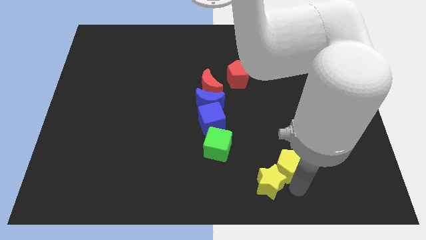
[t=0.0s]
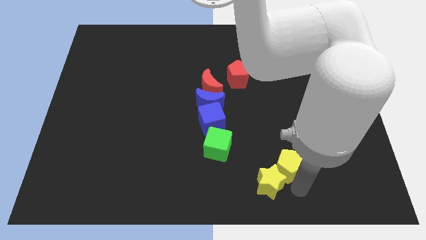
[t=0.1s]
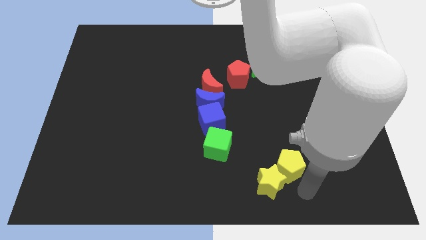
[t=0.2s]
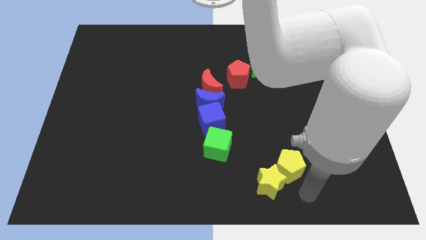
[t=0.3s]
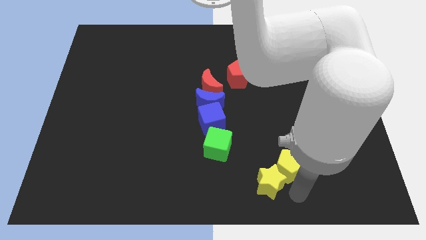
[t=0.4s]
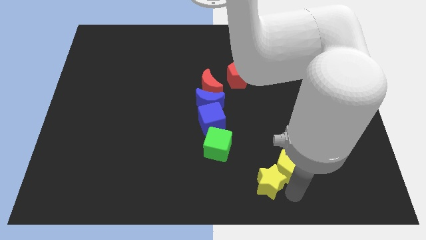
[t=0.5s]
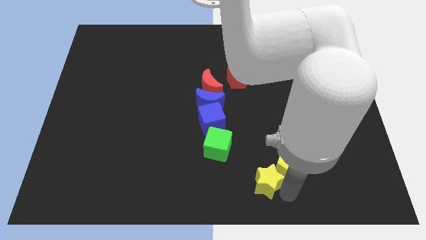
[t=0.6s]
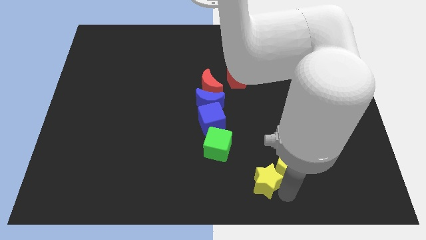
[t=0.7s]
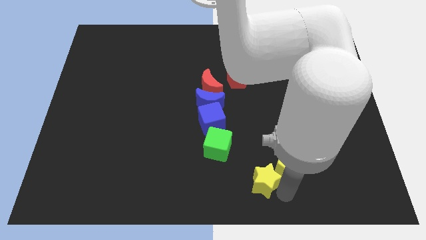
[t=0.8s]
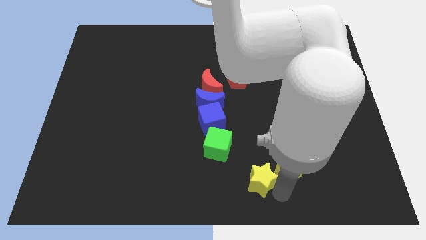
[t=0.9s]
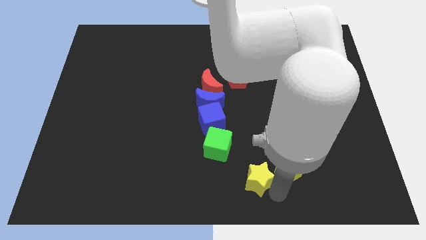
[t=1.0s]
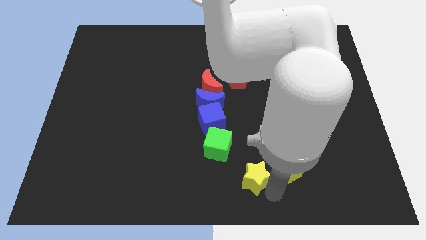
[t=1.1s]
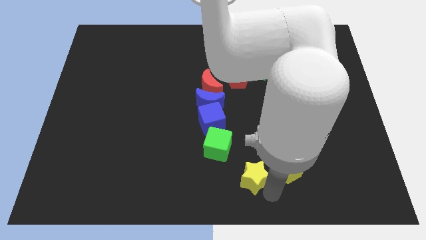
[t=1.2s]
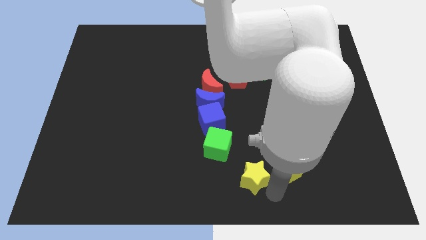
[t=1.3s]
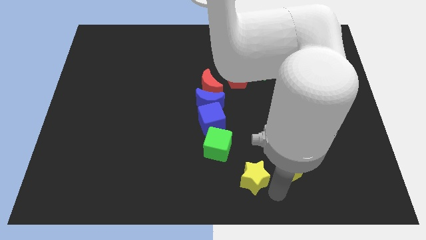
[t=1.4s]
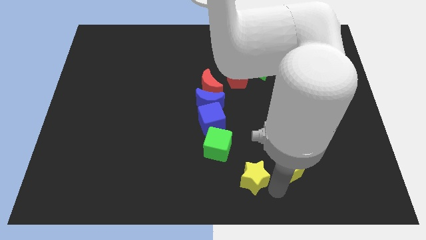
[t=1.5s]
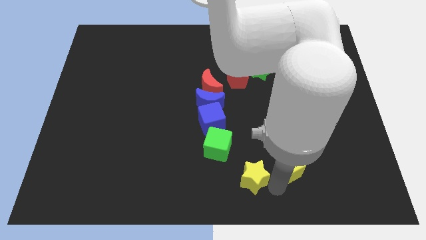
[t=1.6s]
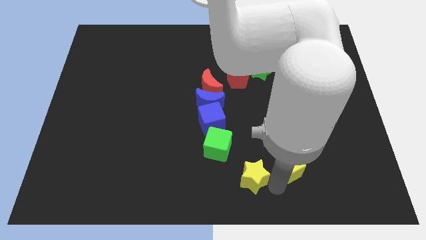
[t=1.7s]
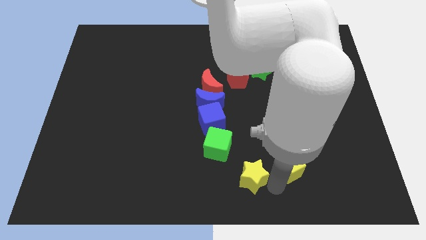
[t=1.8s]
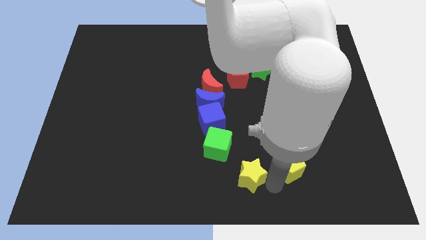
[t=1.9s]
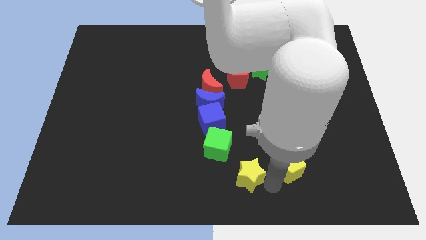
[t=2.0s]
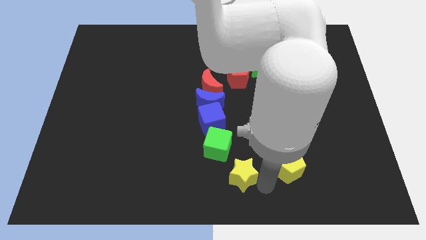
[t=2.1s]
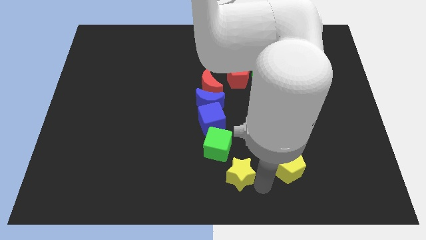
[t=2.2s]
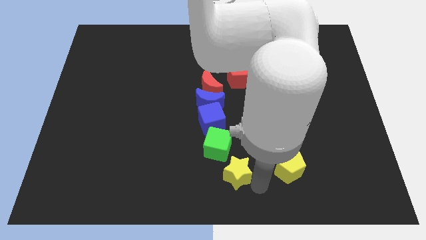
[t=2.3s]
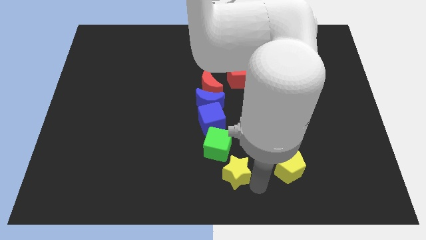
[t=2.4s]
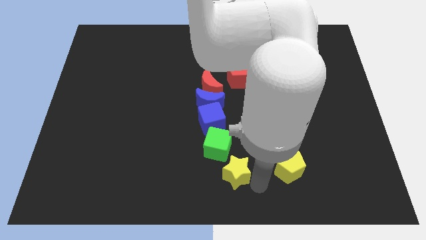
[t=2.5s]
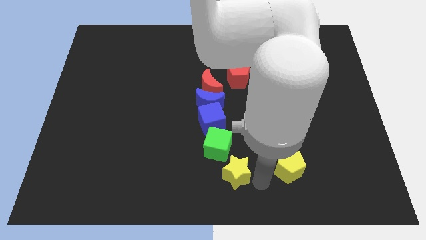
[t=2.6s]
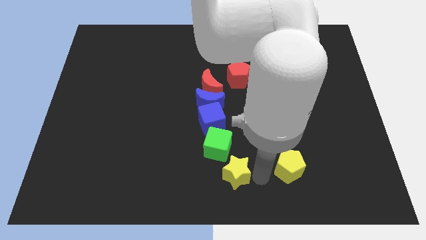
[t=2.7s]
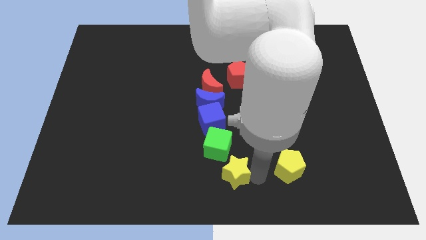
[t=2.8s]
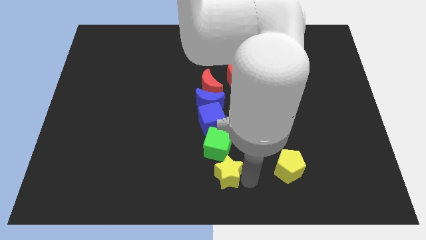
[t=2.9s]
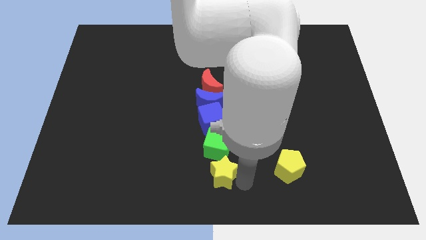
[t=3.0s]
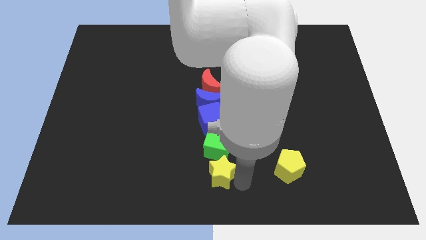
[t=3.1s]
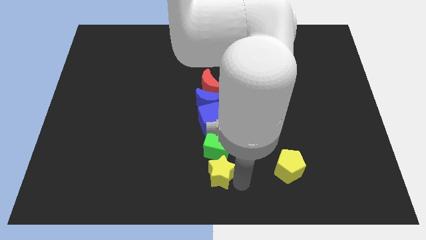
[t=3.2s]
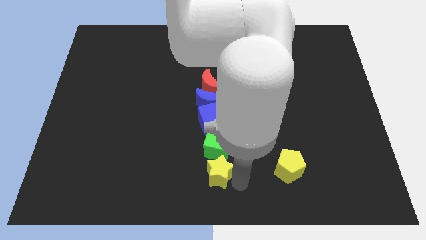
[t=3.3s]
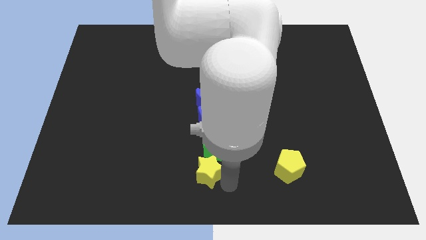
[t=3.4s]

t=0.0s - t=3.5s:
move the yellow star below the green cube

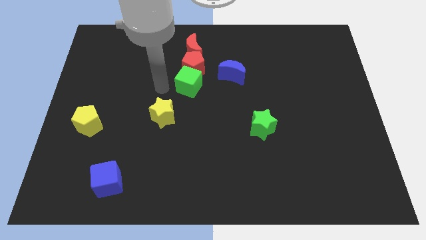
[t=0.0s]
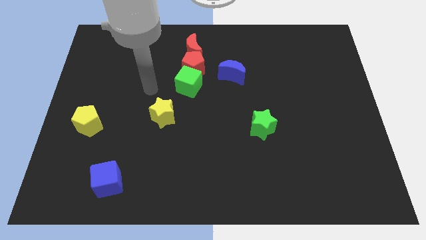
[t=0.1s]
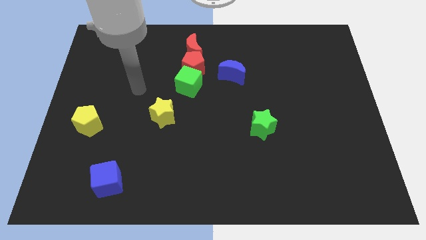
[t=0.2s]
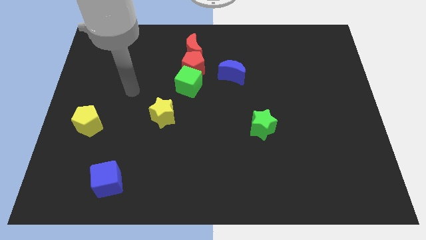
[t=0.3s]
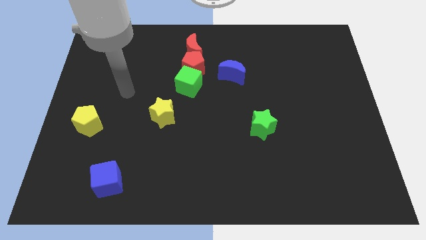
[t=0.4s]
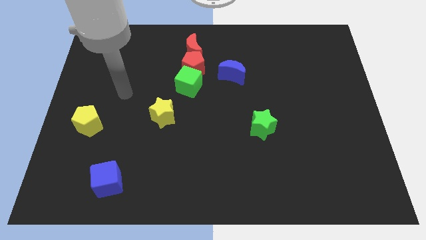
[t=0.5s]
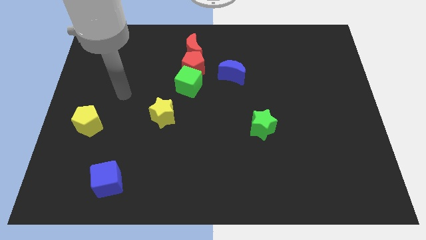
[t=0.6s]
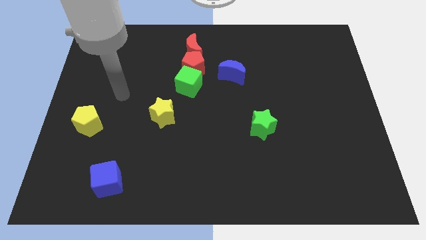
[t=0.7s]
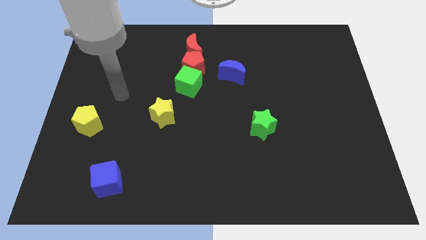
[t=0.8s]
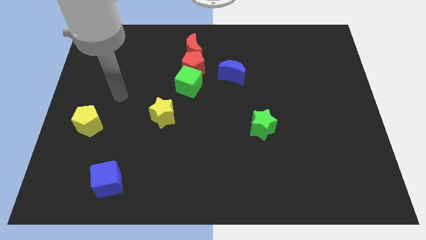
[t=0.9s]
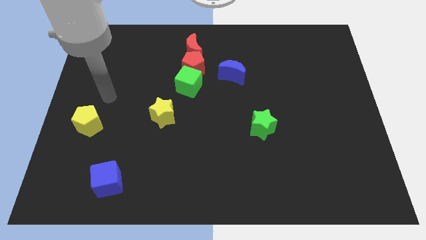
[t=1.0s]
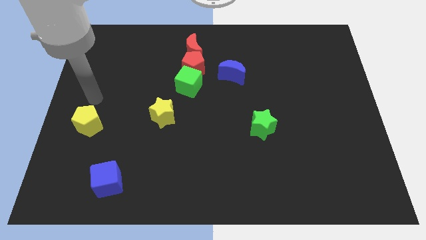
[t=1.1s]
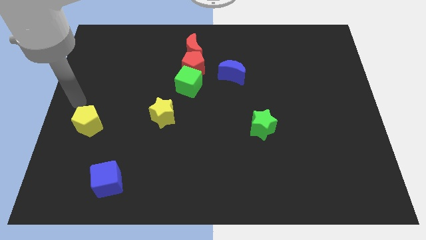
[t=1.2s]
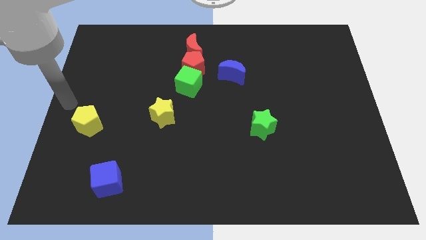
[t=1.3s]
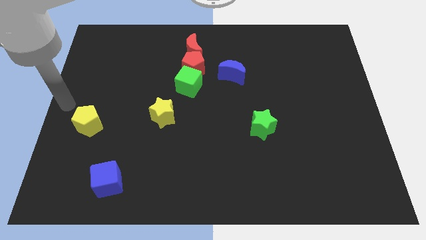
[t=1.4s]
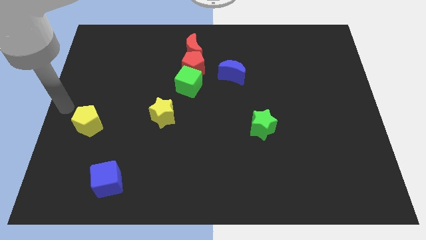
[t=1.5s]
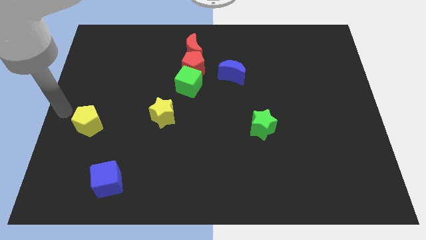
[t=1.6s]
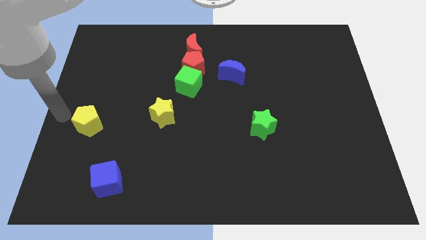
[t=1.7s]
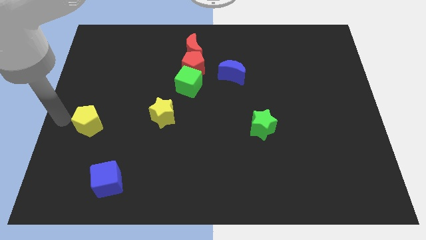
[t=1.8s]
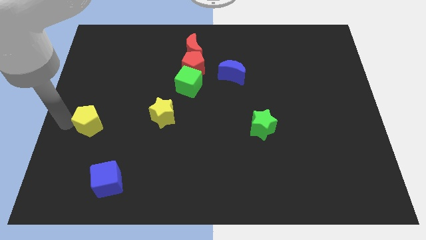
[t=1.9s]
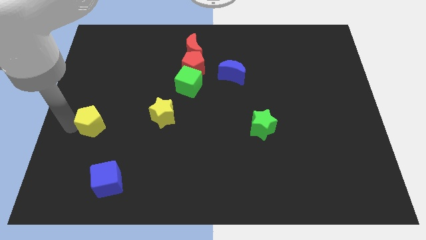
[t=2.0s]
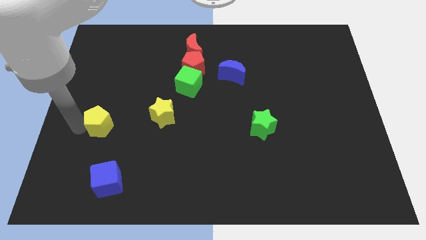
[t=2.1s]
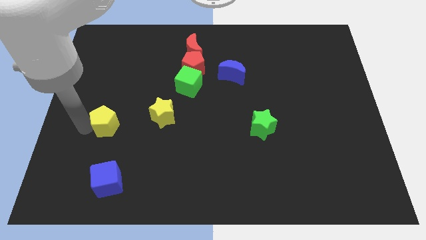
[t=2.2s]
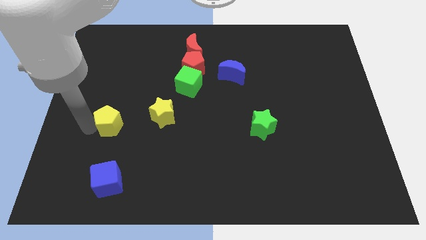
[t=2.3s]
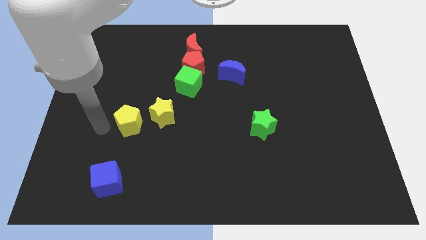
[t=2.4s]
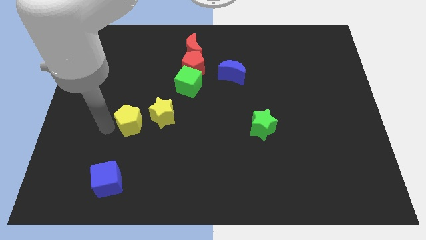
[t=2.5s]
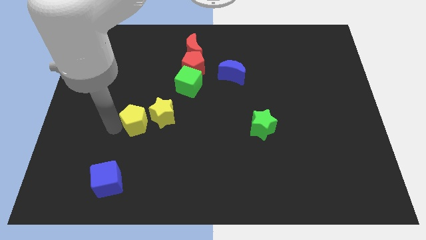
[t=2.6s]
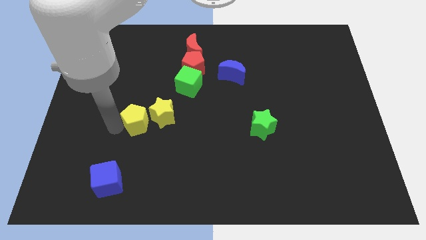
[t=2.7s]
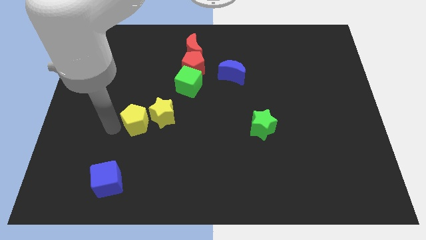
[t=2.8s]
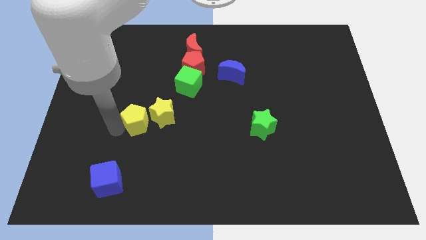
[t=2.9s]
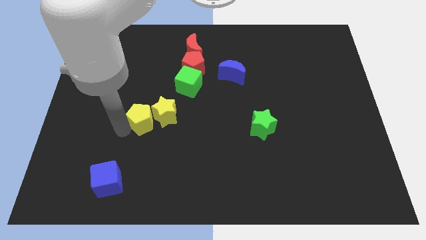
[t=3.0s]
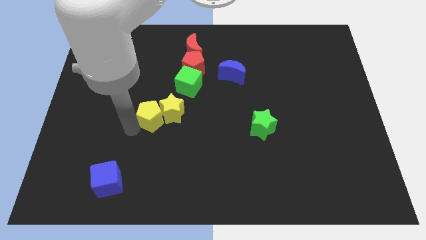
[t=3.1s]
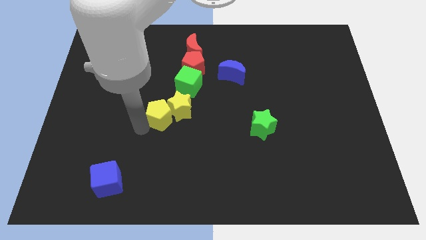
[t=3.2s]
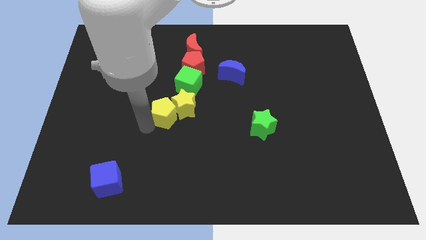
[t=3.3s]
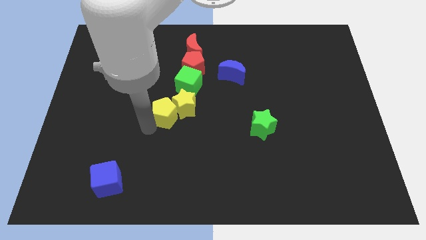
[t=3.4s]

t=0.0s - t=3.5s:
push the yellow pentagon into the yellow star

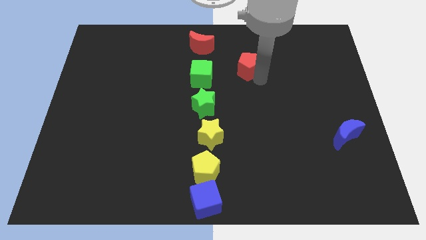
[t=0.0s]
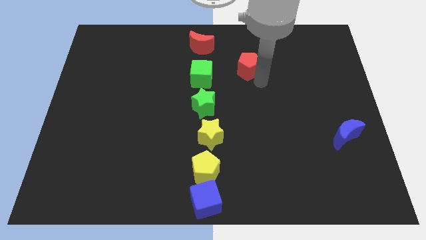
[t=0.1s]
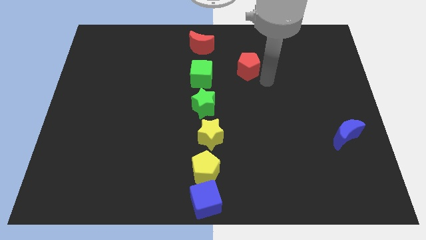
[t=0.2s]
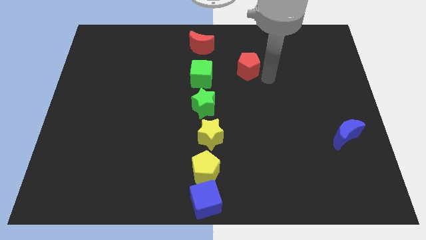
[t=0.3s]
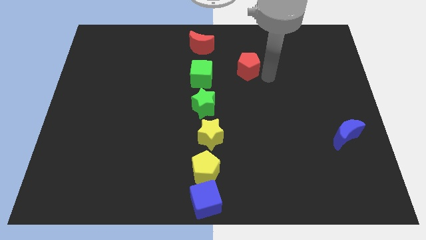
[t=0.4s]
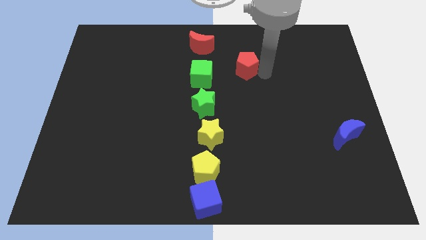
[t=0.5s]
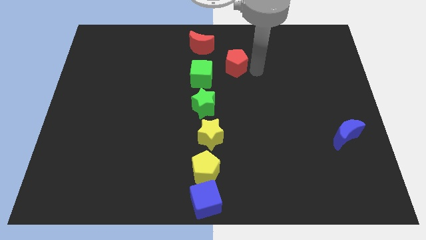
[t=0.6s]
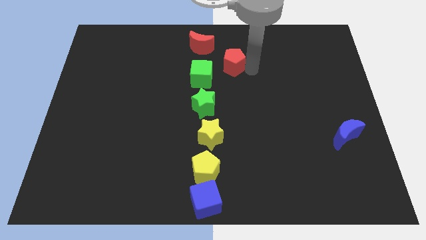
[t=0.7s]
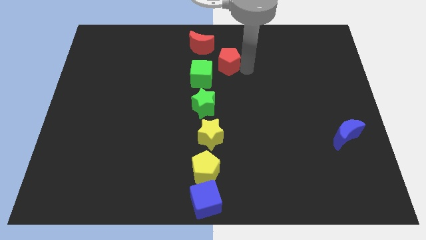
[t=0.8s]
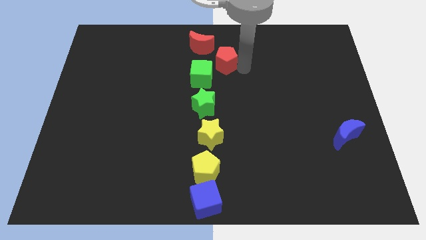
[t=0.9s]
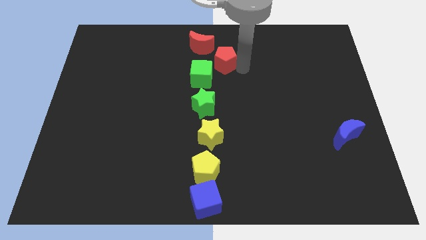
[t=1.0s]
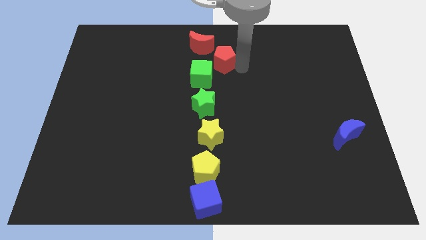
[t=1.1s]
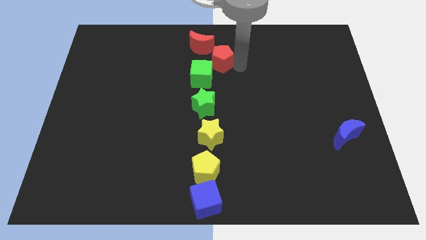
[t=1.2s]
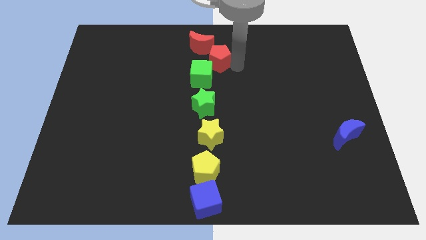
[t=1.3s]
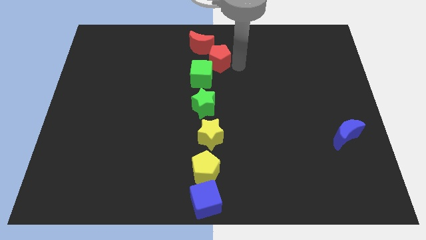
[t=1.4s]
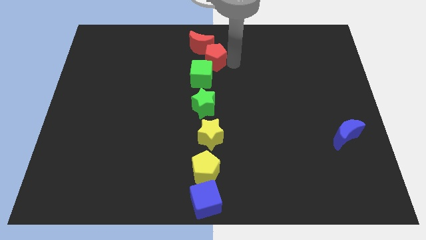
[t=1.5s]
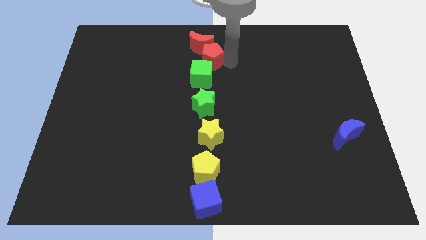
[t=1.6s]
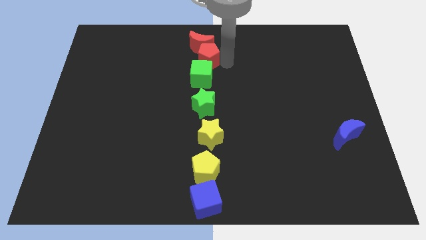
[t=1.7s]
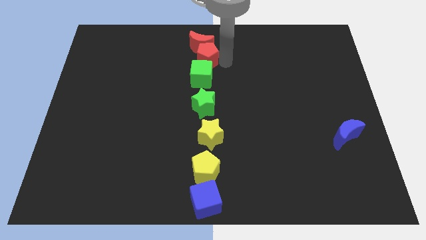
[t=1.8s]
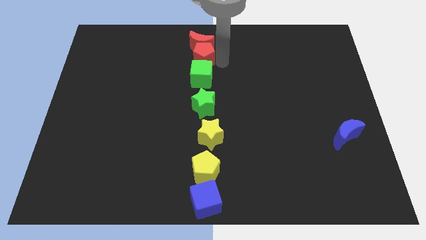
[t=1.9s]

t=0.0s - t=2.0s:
put the red pentagon in between the red moon and green cube
